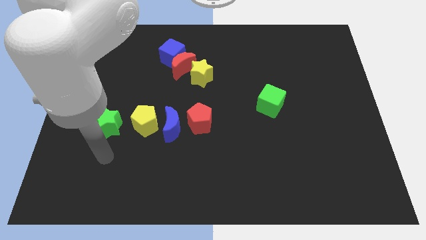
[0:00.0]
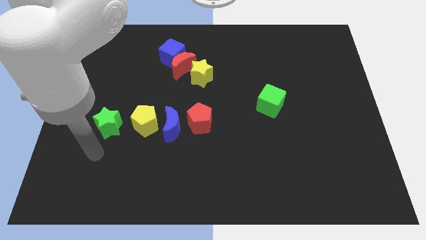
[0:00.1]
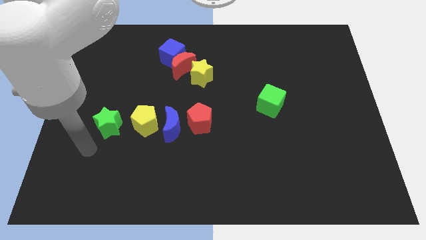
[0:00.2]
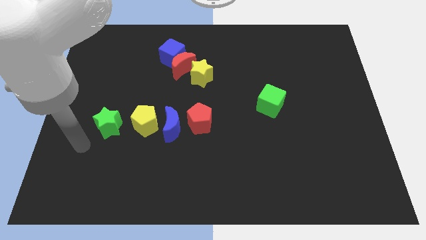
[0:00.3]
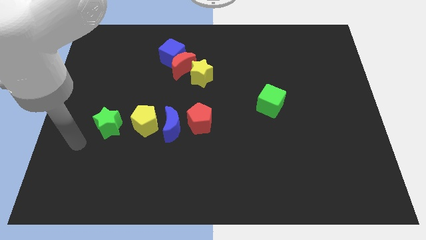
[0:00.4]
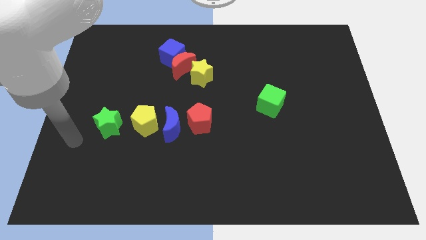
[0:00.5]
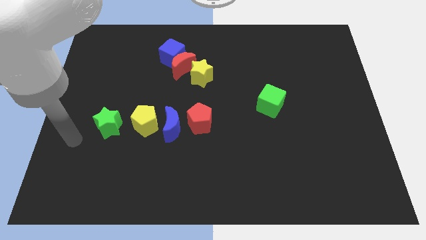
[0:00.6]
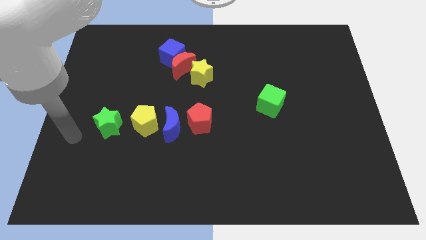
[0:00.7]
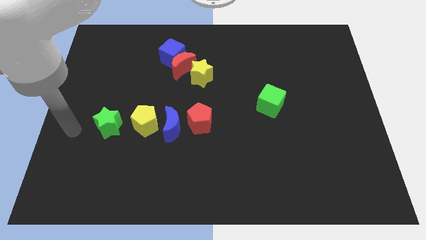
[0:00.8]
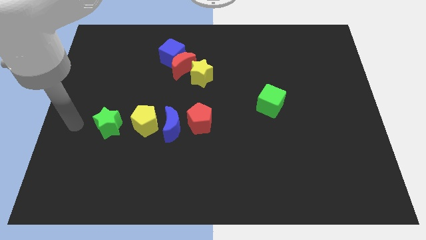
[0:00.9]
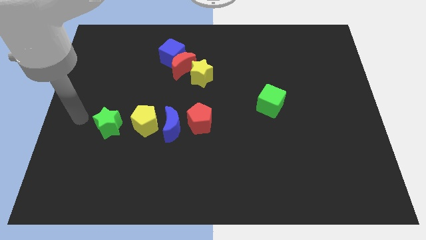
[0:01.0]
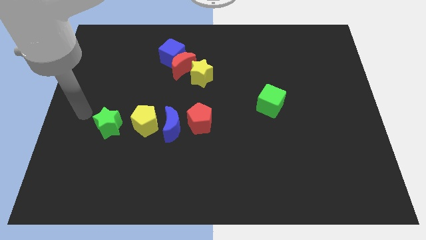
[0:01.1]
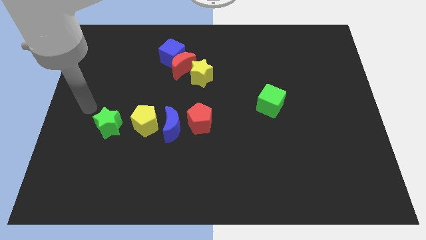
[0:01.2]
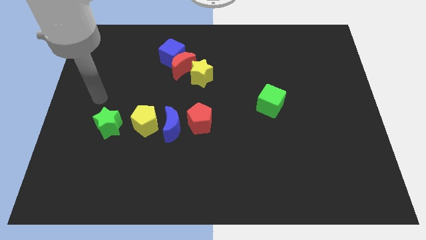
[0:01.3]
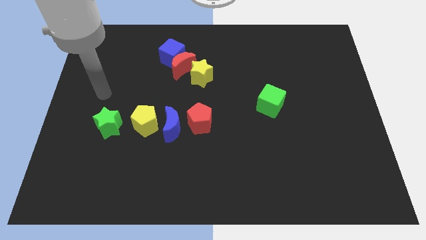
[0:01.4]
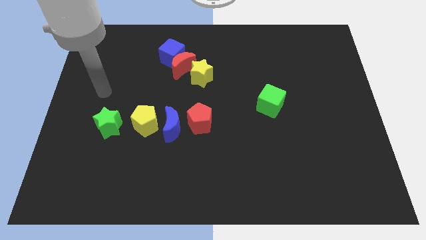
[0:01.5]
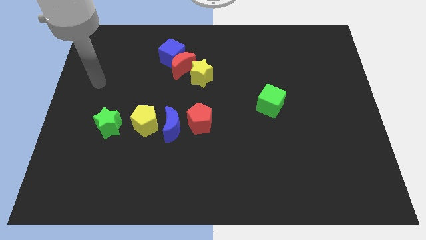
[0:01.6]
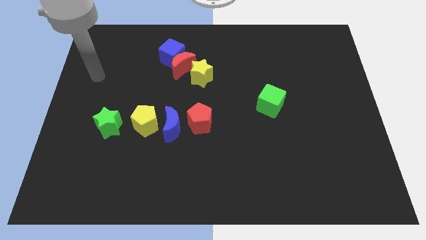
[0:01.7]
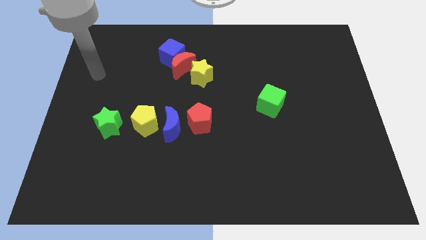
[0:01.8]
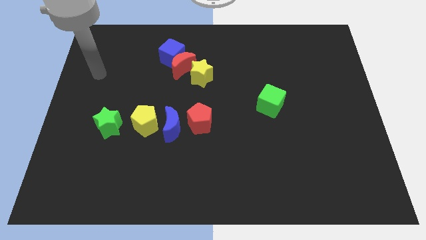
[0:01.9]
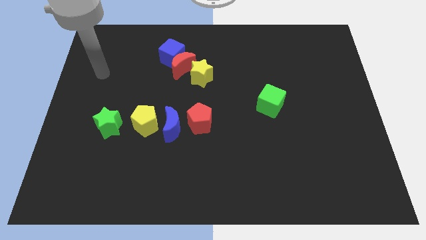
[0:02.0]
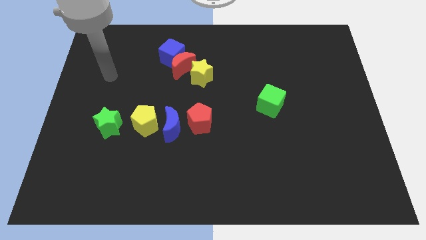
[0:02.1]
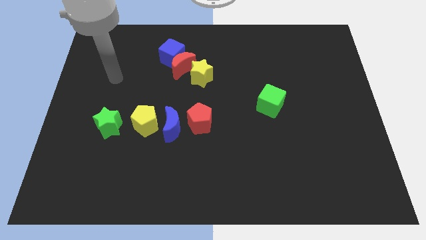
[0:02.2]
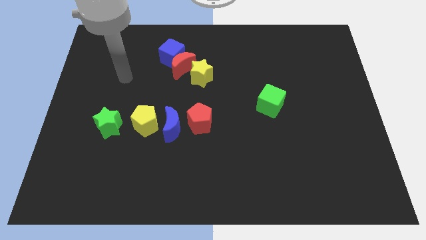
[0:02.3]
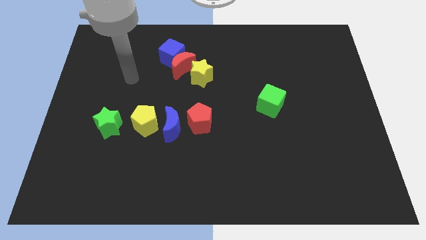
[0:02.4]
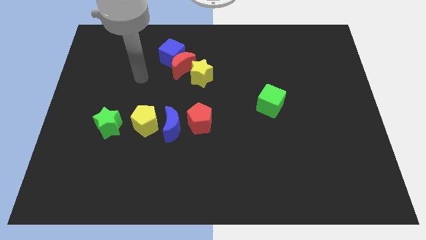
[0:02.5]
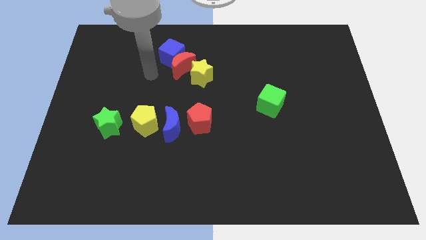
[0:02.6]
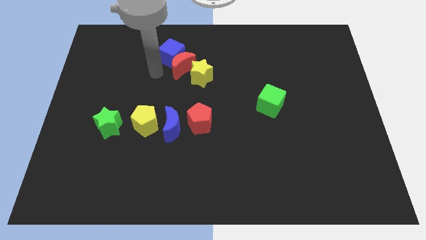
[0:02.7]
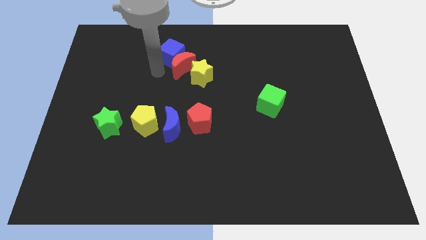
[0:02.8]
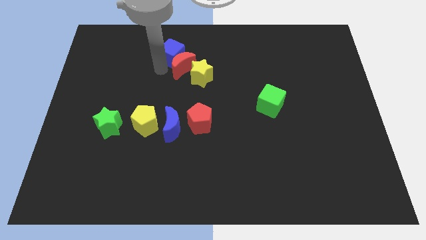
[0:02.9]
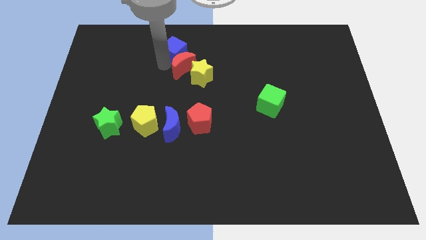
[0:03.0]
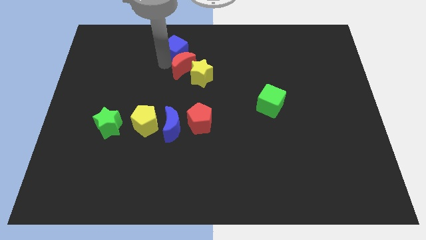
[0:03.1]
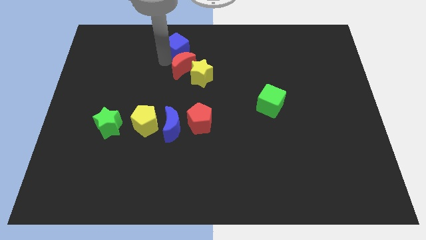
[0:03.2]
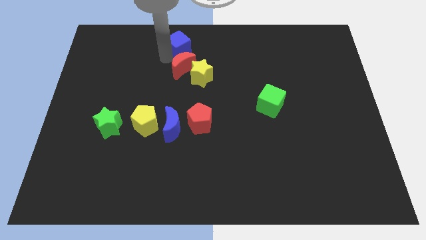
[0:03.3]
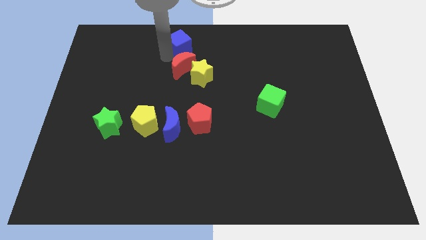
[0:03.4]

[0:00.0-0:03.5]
move the blue cube up slightly

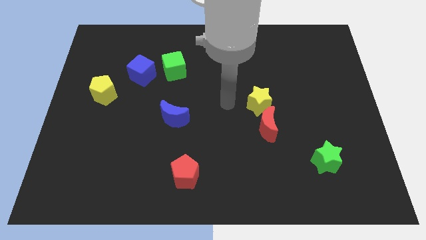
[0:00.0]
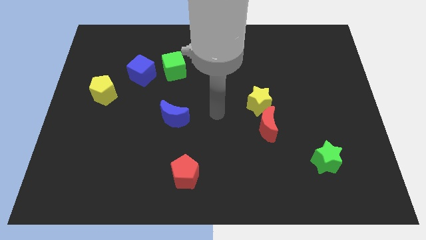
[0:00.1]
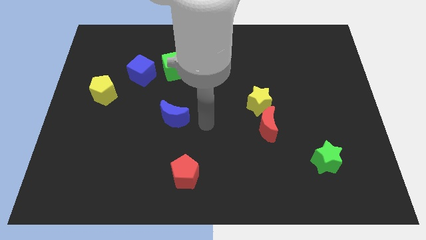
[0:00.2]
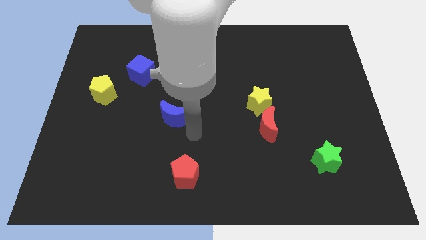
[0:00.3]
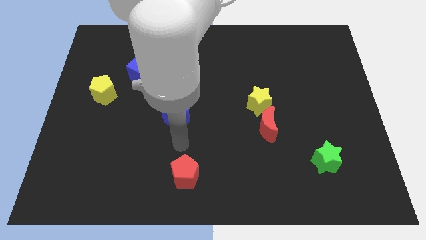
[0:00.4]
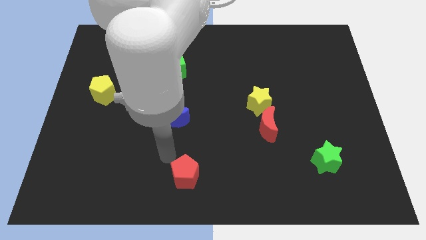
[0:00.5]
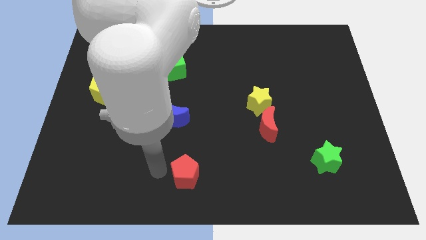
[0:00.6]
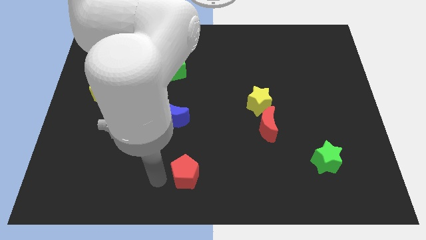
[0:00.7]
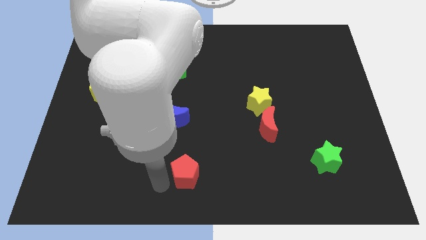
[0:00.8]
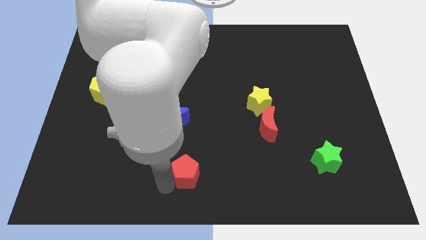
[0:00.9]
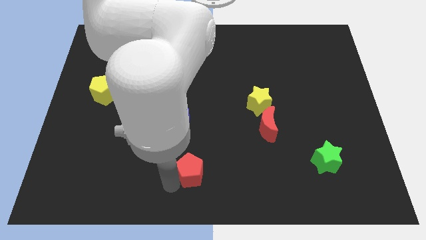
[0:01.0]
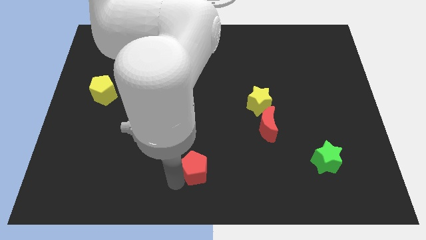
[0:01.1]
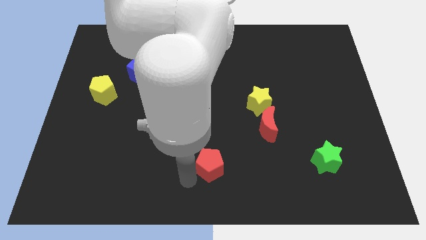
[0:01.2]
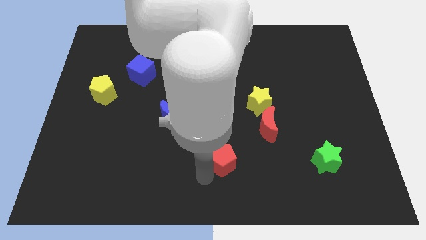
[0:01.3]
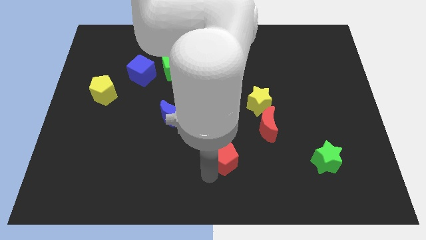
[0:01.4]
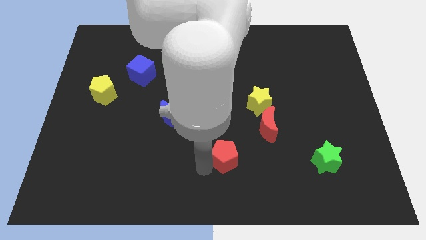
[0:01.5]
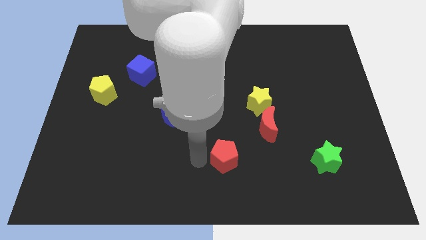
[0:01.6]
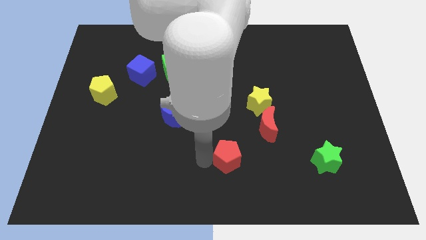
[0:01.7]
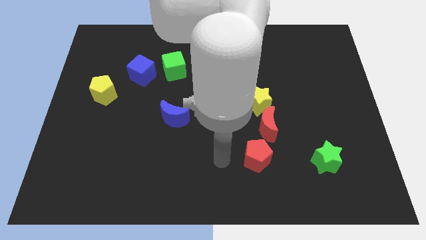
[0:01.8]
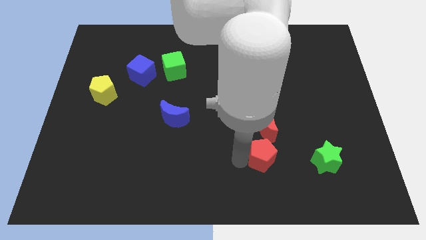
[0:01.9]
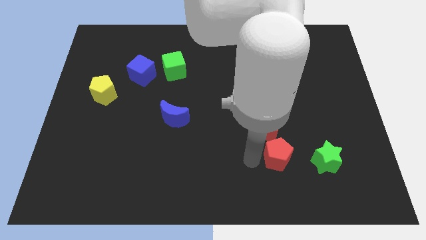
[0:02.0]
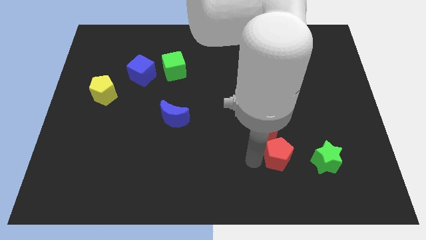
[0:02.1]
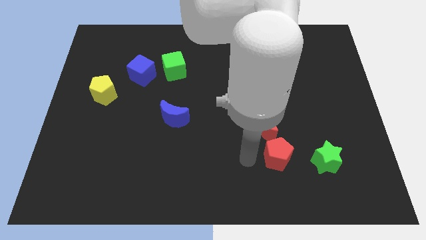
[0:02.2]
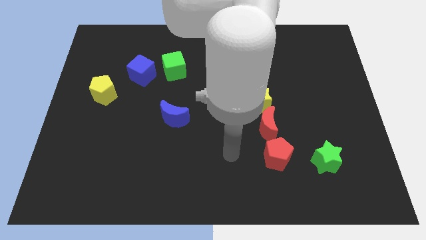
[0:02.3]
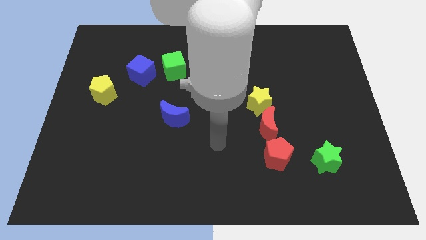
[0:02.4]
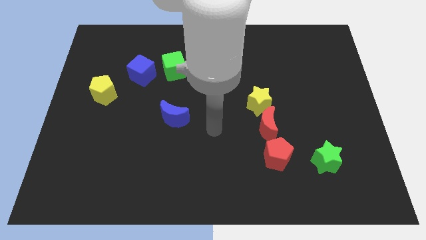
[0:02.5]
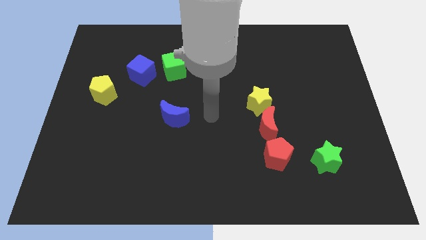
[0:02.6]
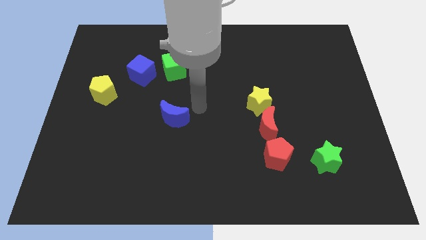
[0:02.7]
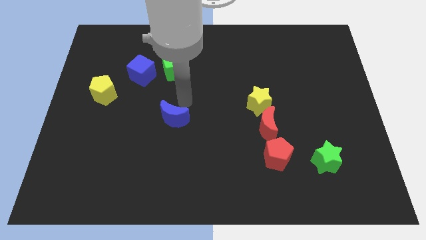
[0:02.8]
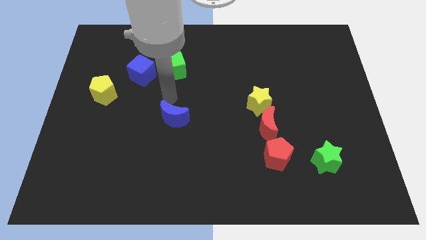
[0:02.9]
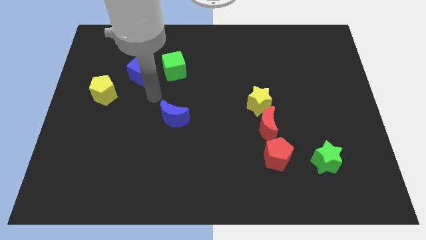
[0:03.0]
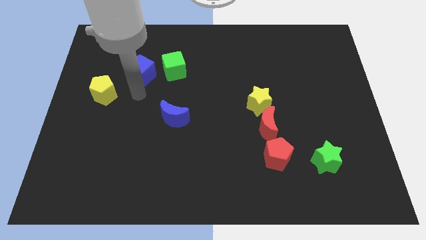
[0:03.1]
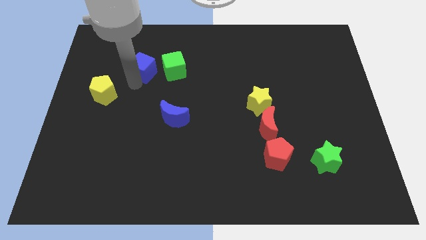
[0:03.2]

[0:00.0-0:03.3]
place the red pentagon vertically below the red moon

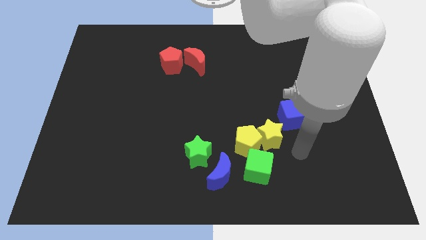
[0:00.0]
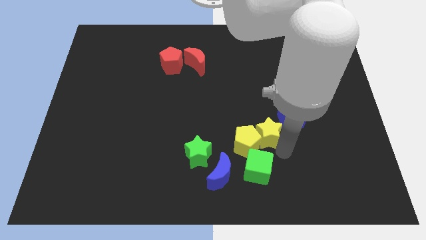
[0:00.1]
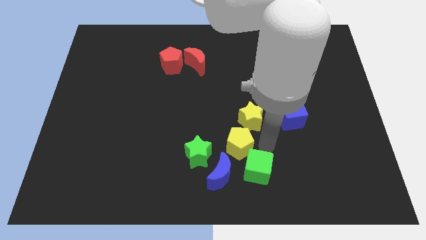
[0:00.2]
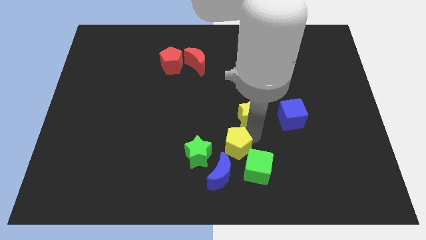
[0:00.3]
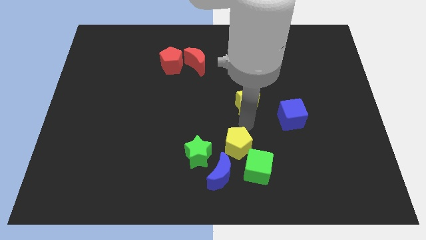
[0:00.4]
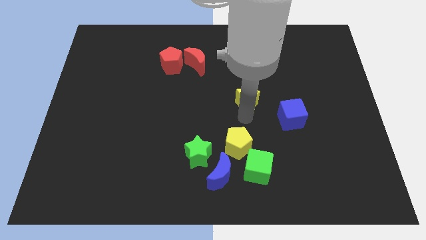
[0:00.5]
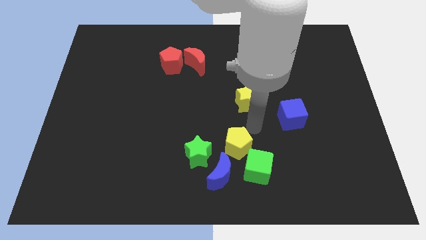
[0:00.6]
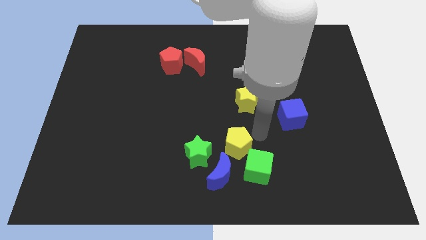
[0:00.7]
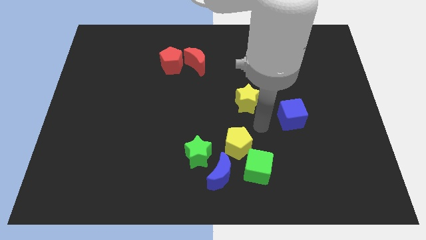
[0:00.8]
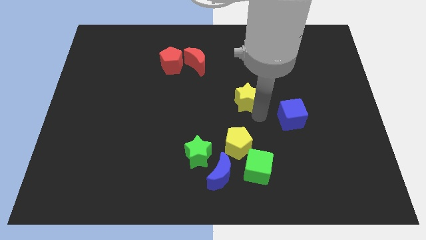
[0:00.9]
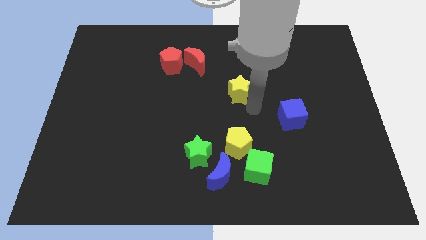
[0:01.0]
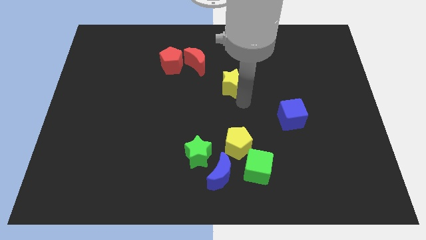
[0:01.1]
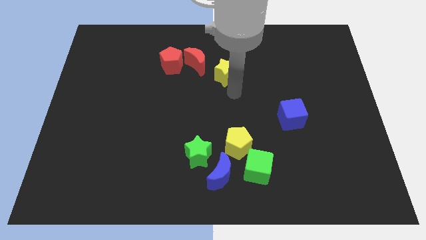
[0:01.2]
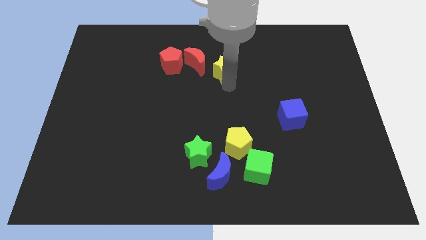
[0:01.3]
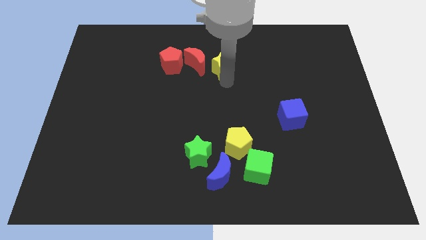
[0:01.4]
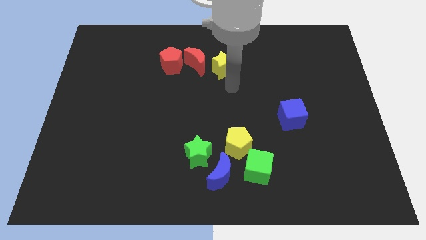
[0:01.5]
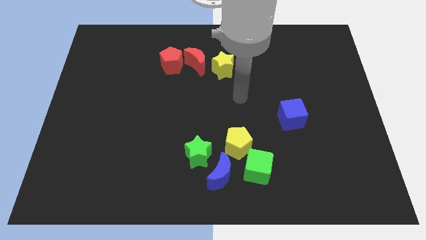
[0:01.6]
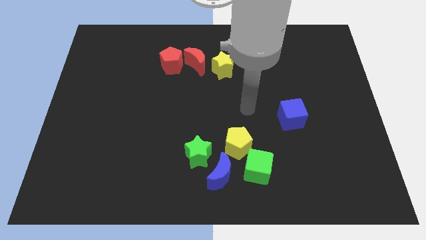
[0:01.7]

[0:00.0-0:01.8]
move yellow star towards red crescent

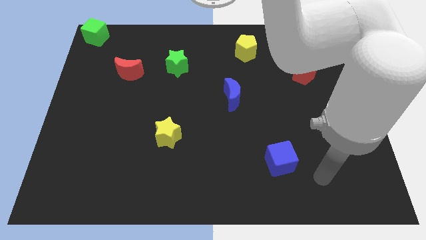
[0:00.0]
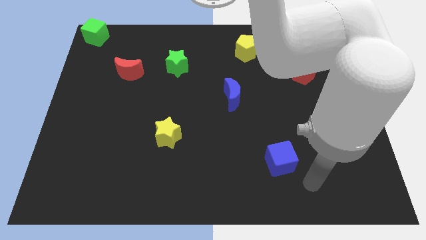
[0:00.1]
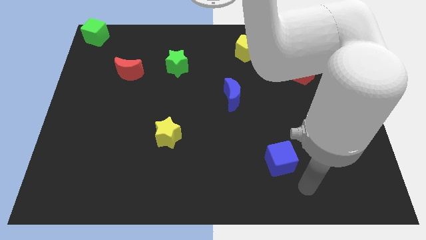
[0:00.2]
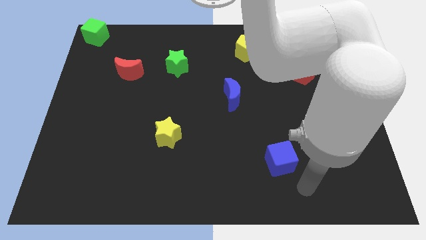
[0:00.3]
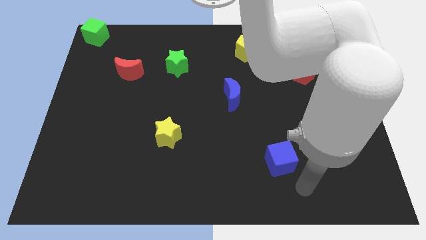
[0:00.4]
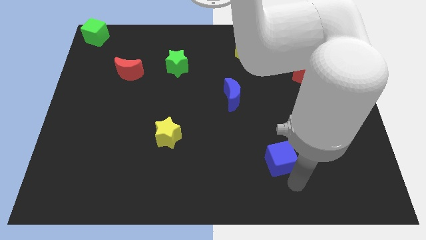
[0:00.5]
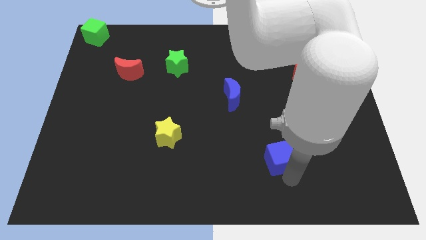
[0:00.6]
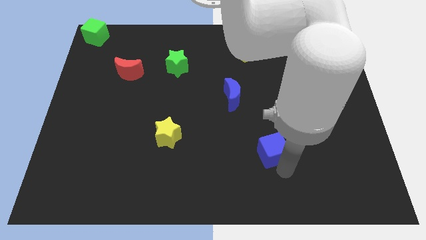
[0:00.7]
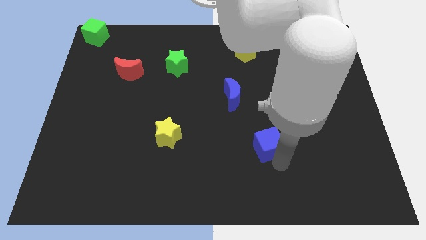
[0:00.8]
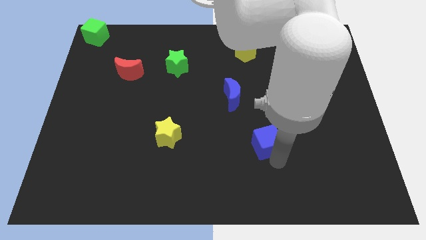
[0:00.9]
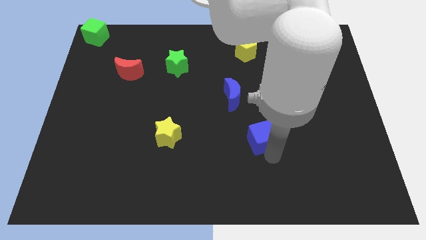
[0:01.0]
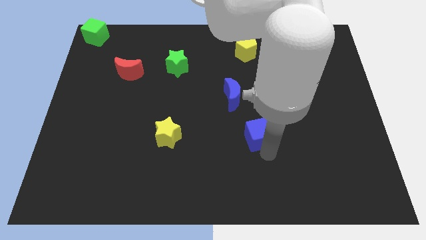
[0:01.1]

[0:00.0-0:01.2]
slide blue cube to the right of yellow star
